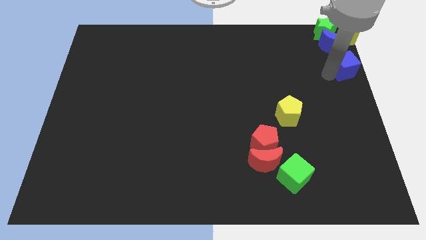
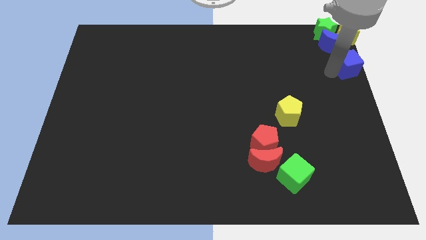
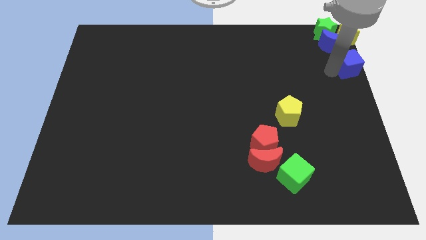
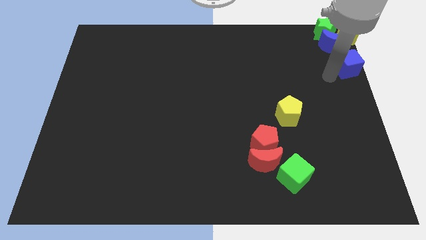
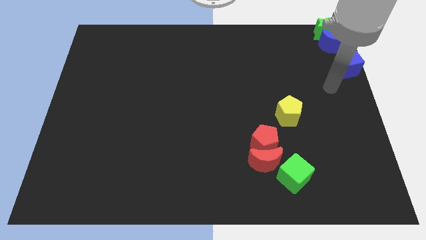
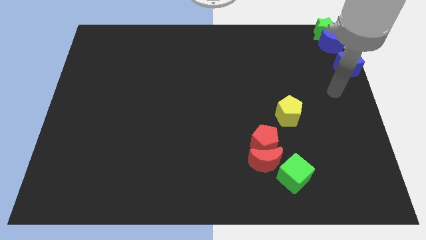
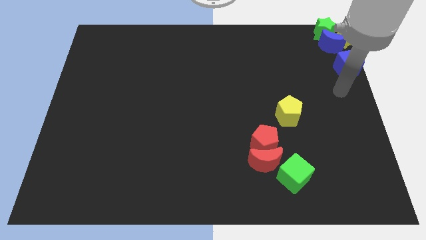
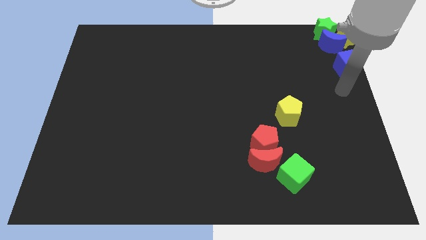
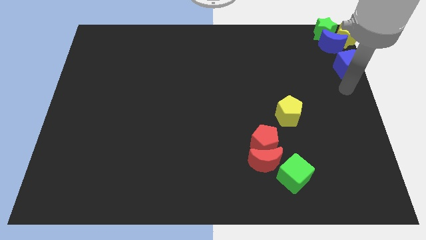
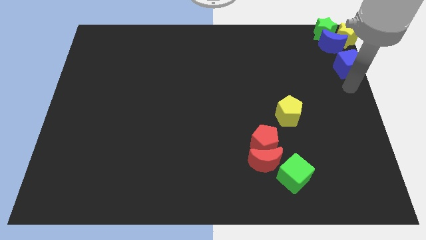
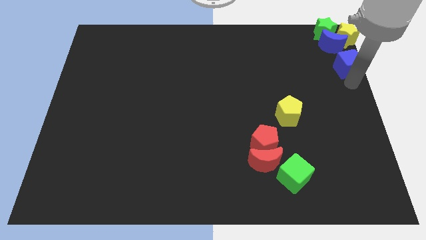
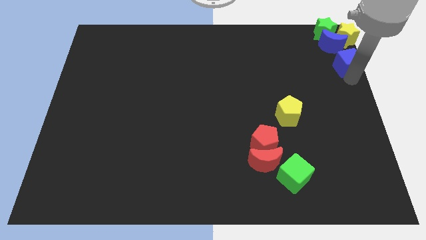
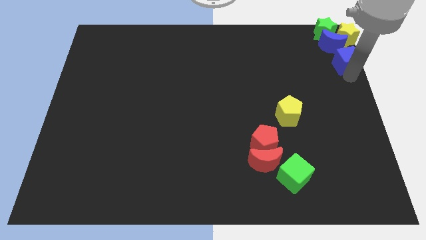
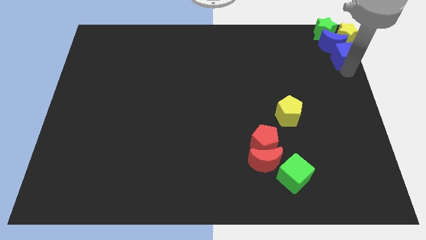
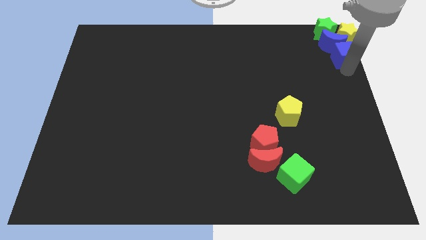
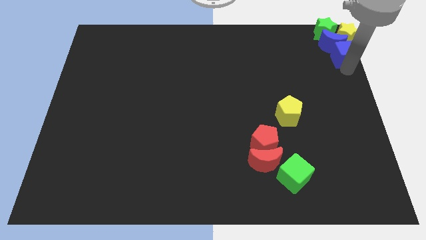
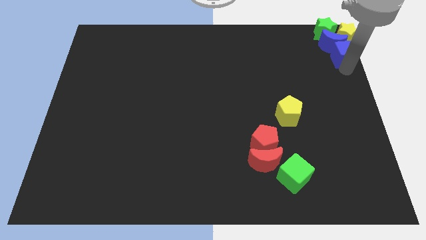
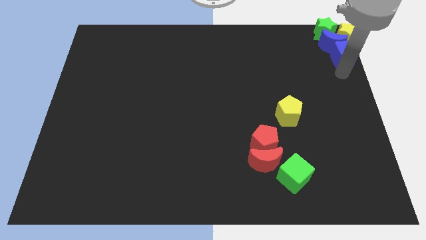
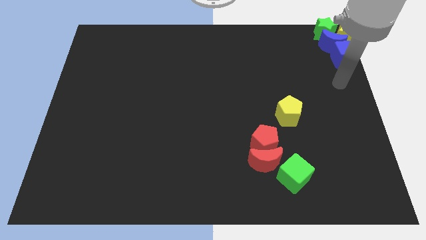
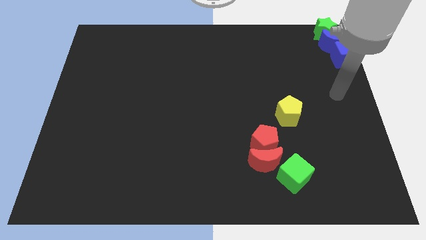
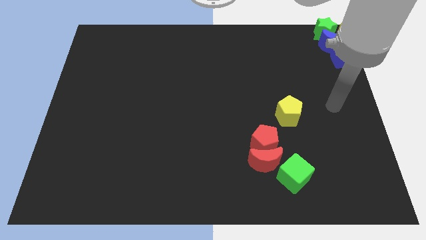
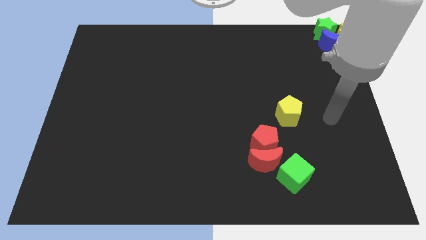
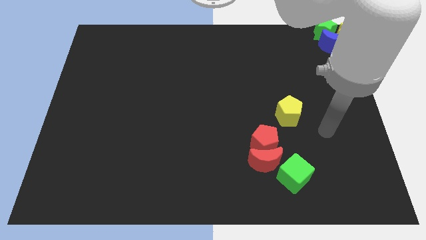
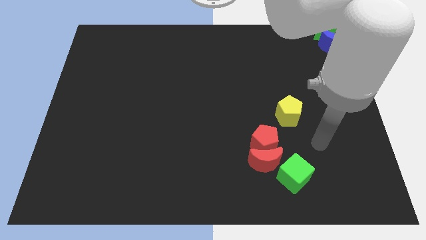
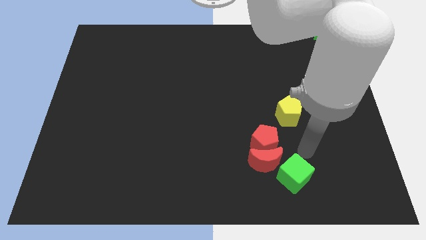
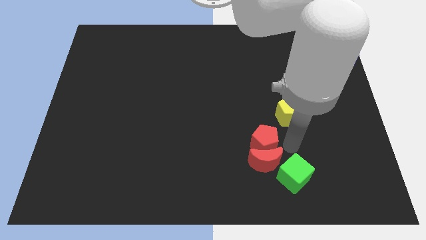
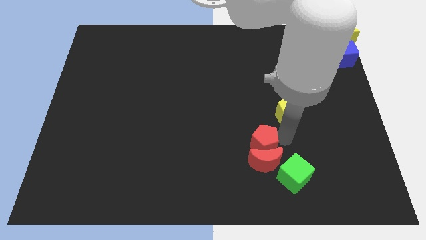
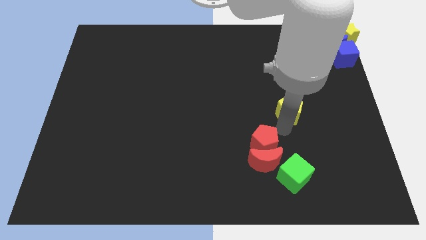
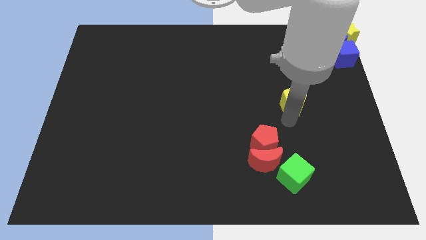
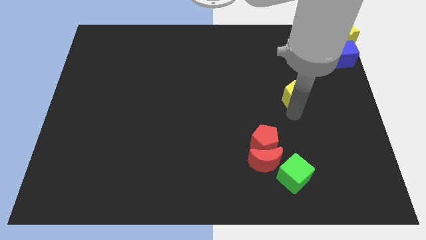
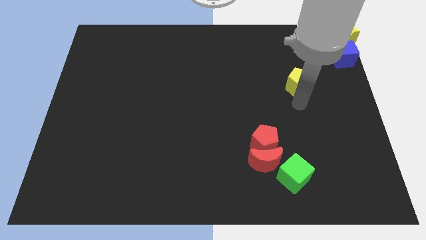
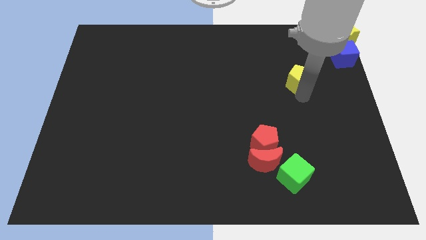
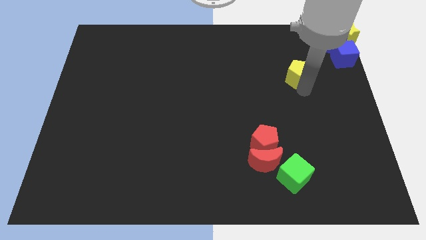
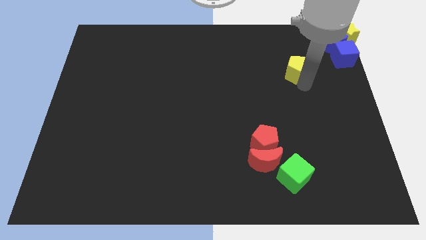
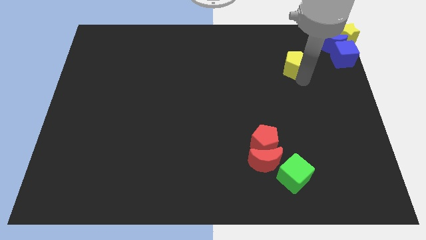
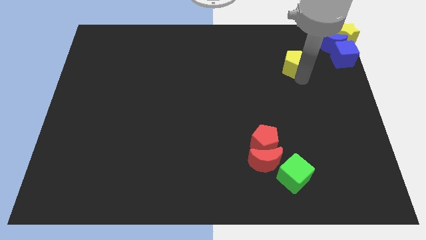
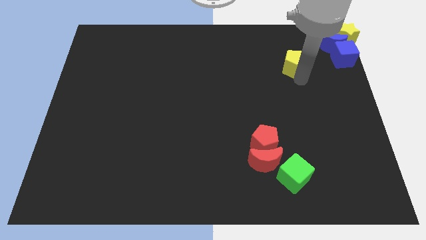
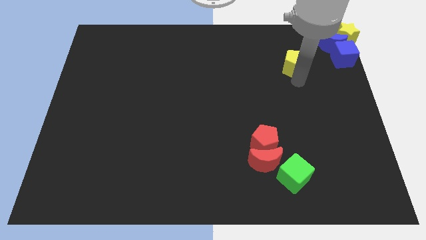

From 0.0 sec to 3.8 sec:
place the yellow pentagon left to the blue cube

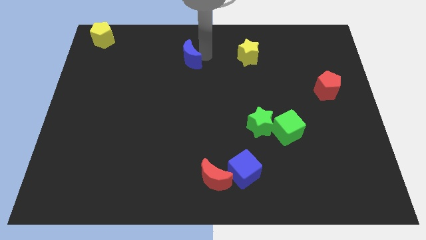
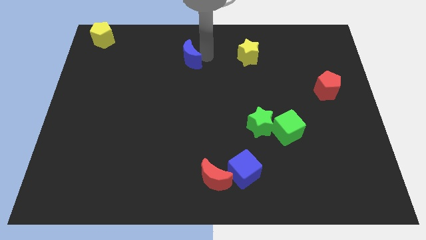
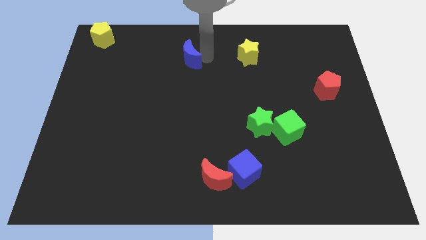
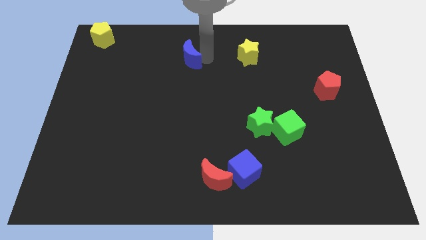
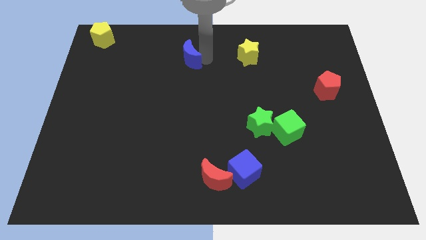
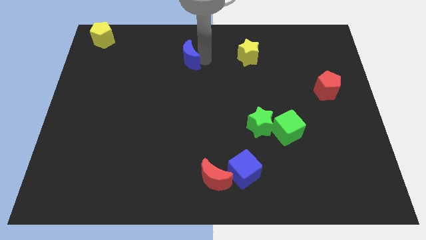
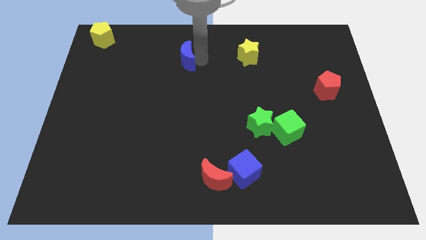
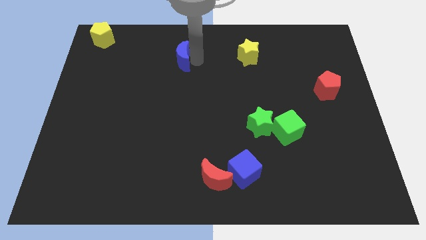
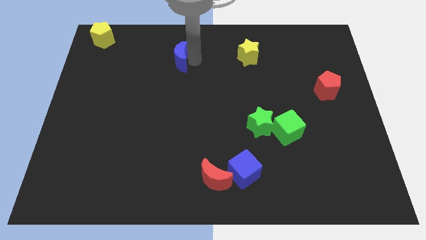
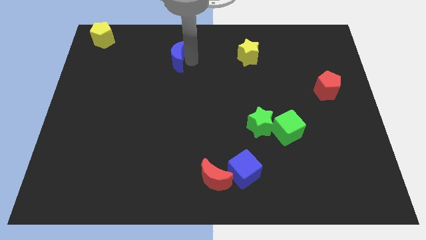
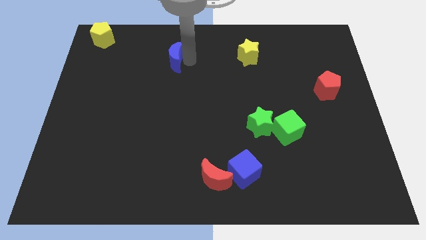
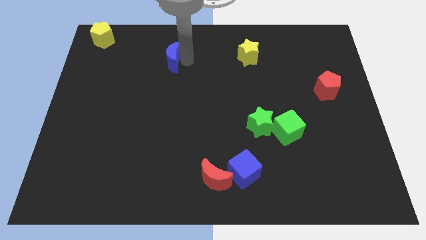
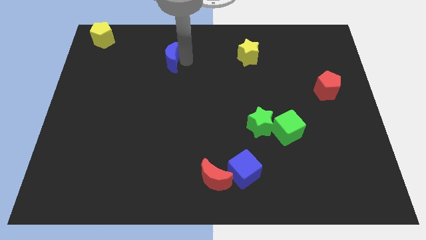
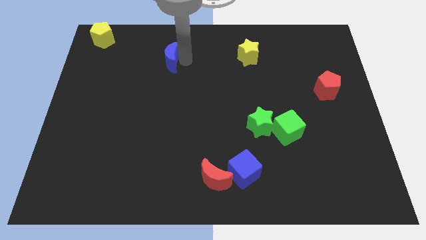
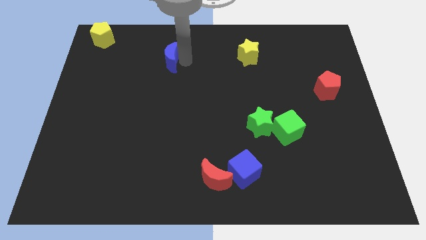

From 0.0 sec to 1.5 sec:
move the red half moon slightly upwards

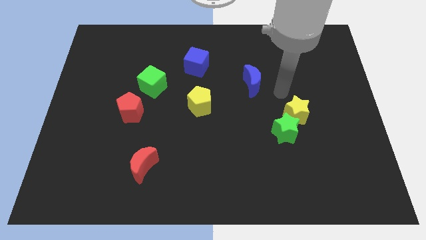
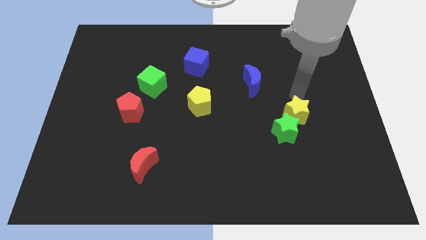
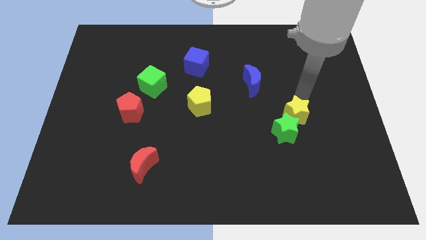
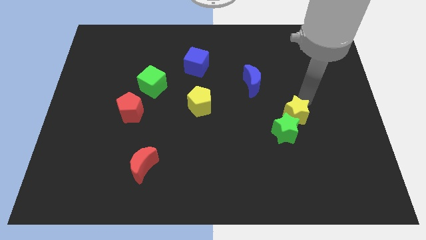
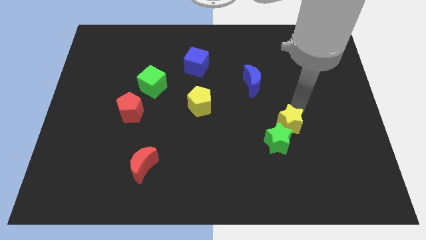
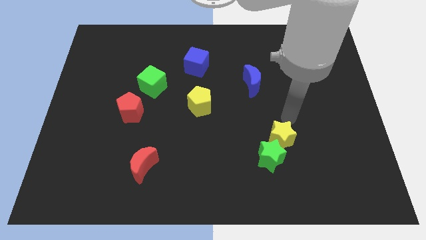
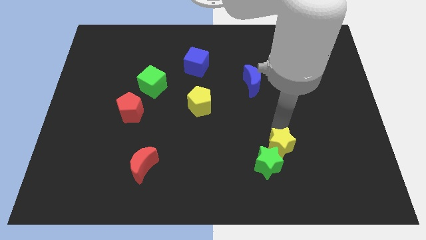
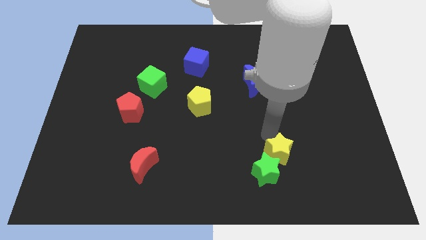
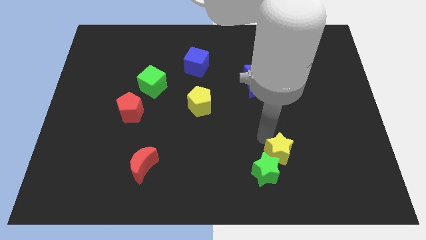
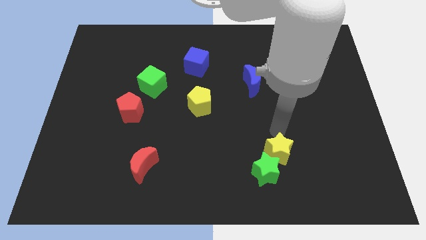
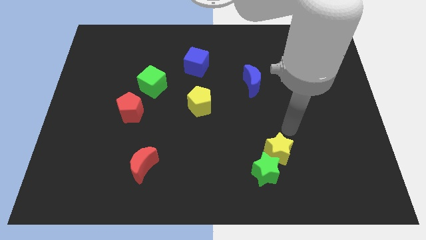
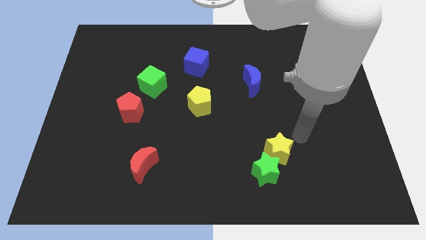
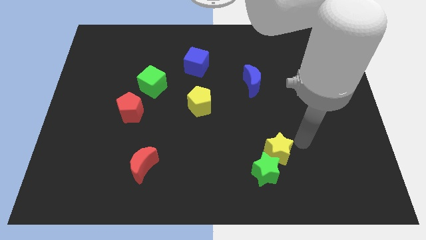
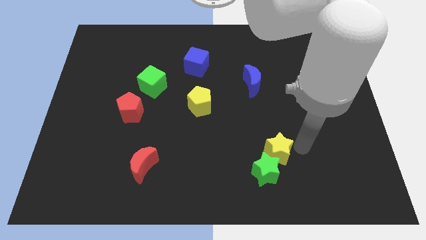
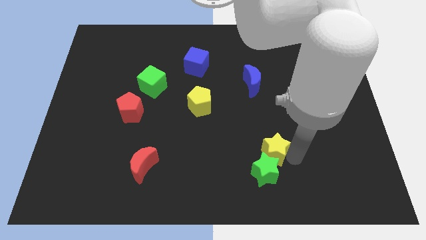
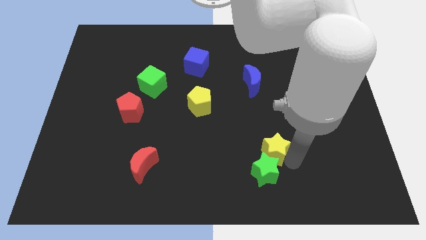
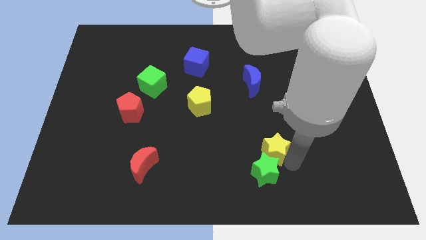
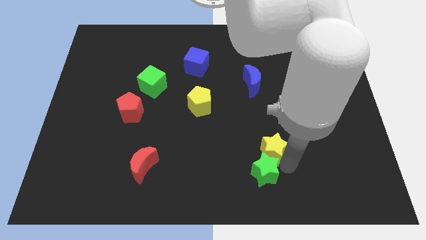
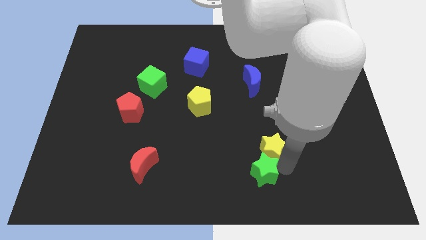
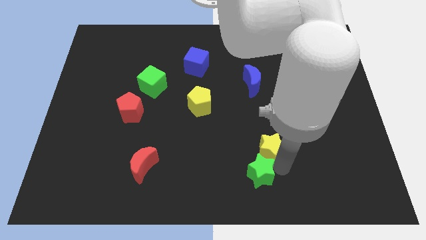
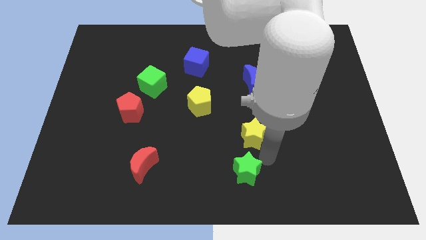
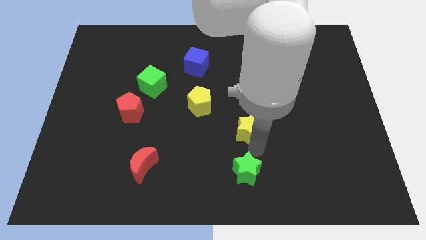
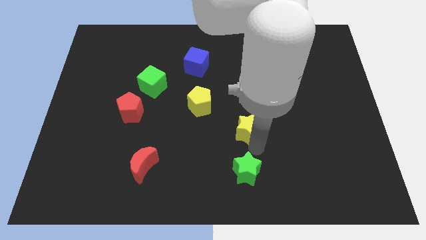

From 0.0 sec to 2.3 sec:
push both green and yellow stars at a time to the bottom center

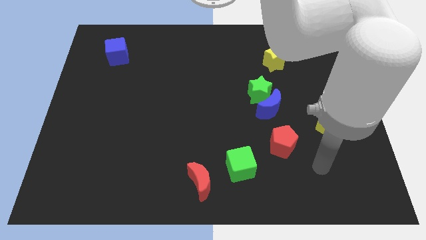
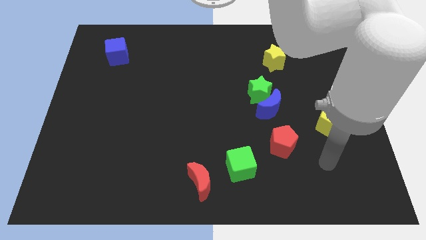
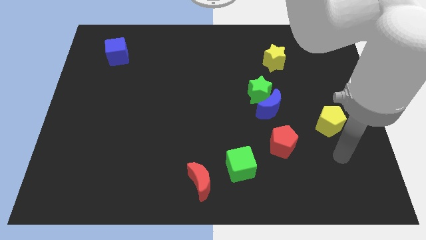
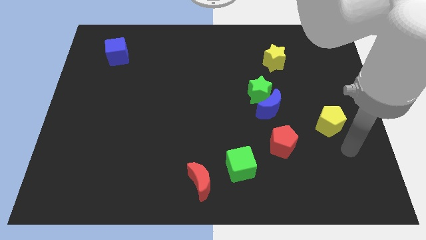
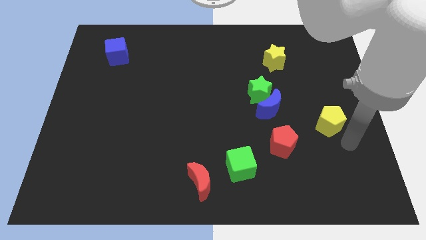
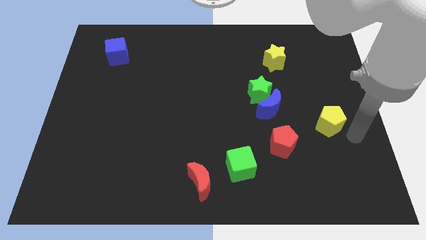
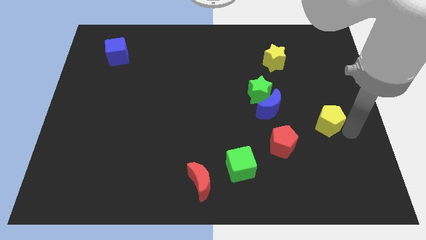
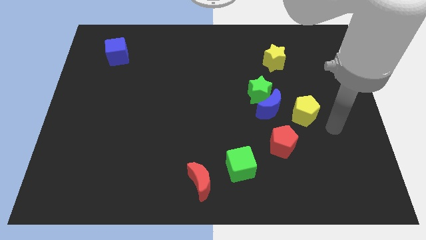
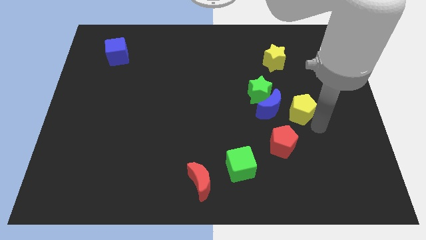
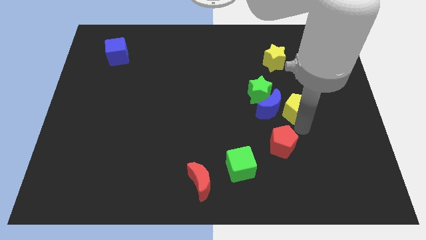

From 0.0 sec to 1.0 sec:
move the yellow pentagon to the right side of the blue moon

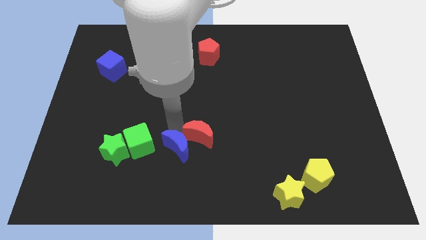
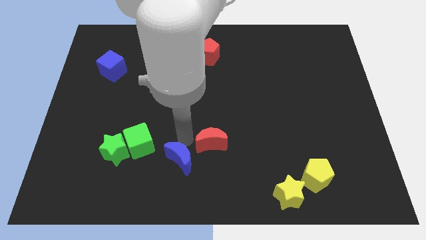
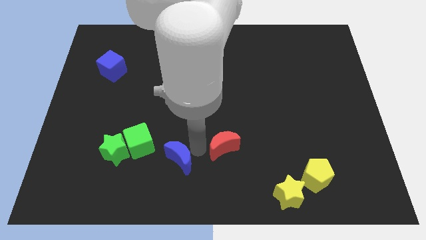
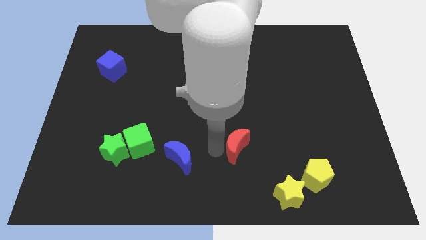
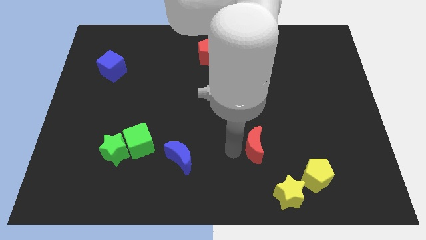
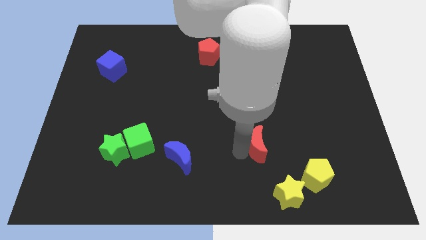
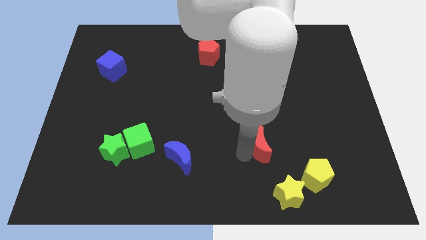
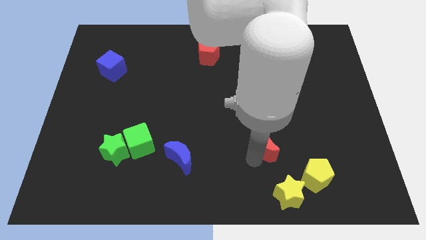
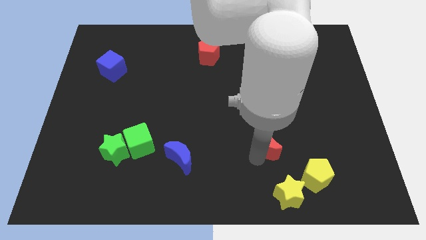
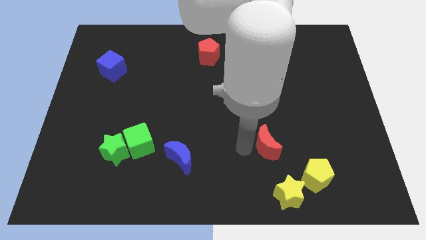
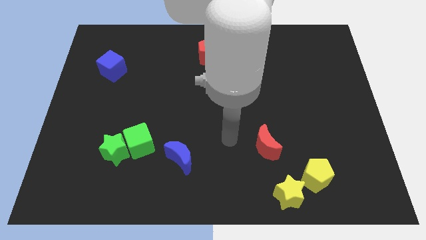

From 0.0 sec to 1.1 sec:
separate red moon and blue moon
